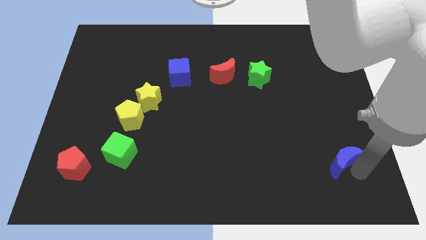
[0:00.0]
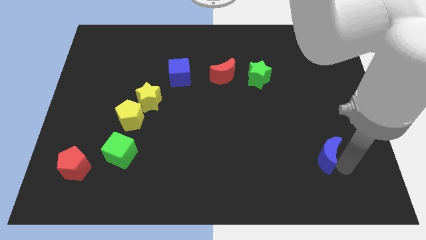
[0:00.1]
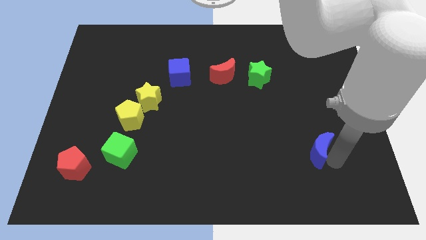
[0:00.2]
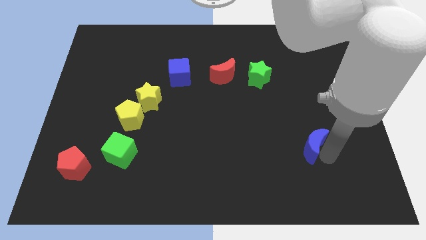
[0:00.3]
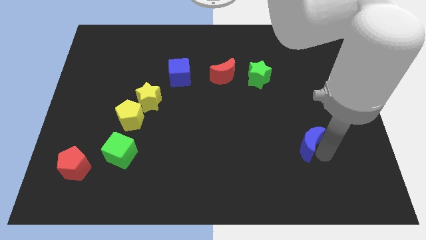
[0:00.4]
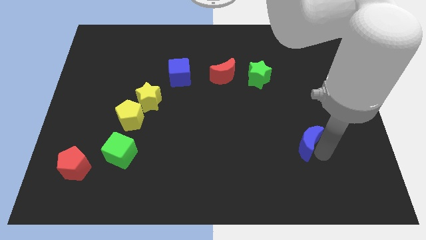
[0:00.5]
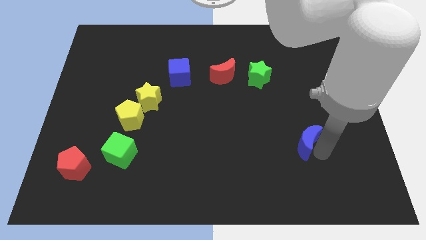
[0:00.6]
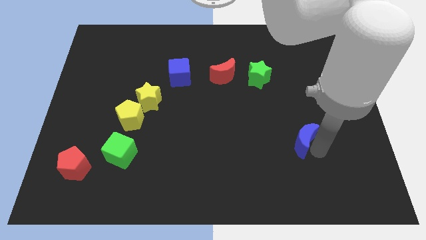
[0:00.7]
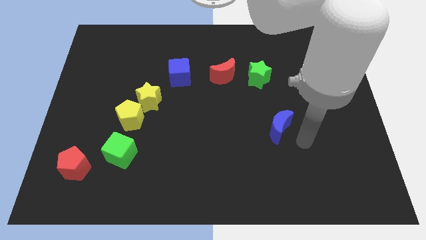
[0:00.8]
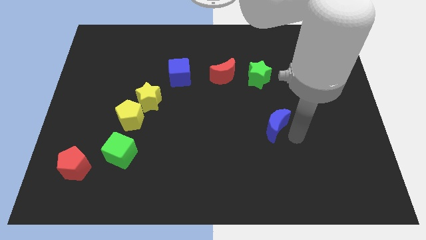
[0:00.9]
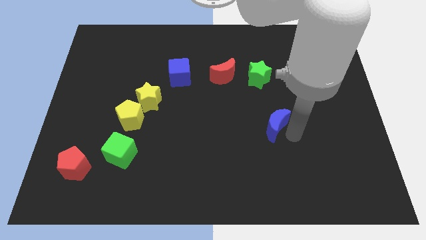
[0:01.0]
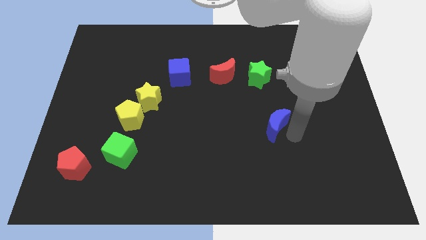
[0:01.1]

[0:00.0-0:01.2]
push the blue crescent towards the center of the board

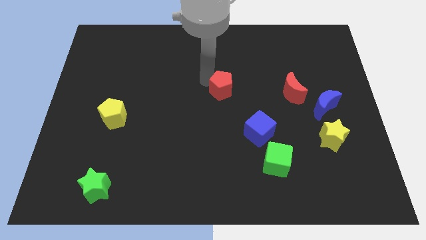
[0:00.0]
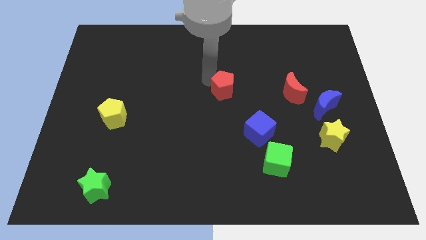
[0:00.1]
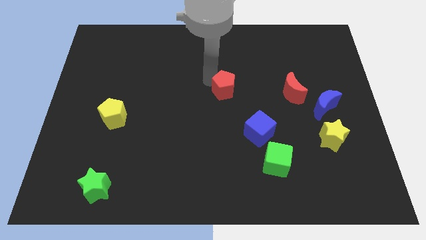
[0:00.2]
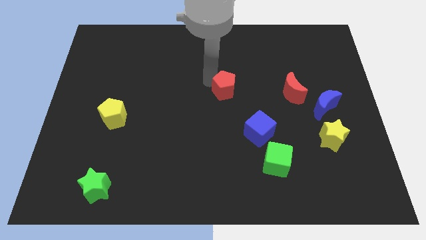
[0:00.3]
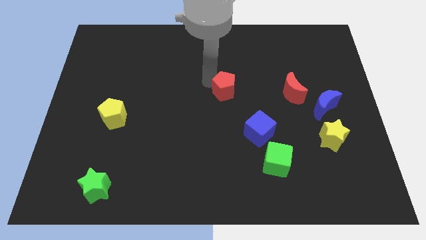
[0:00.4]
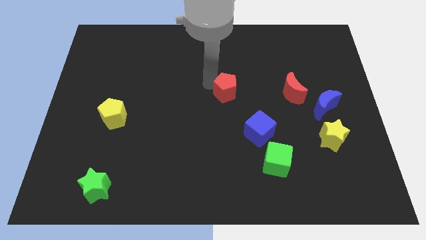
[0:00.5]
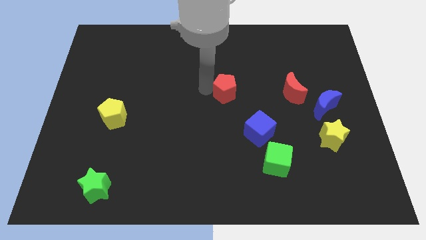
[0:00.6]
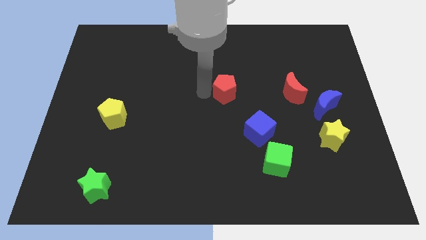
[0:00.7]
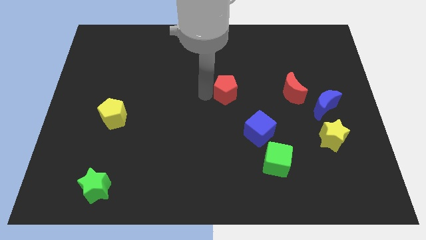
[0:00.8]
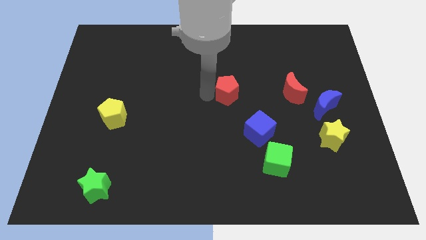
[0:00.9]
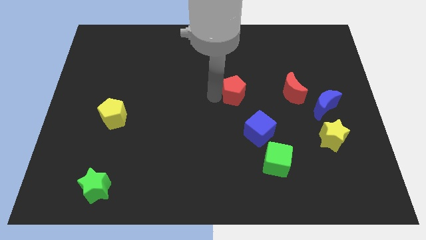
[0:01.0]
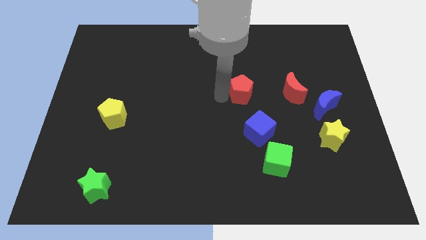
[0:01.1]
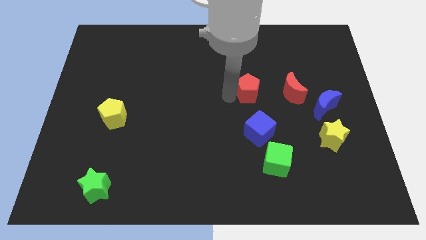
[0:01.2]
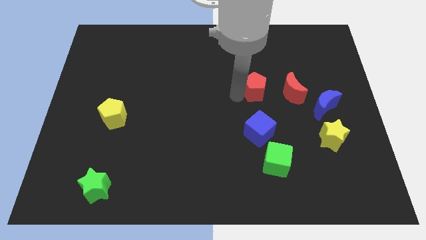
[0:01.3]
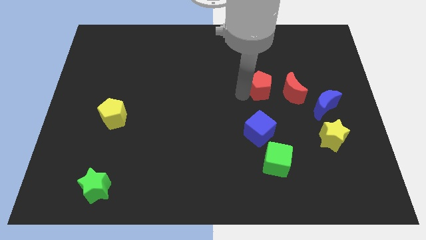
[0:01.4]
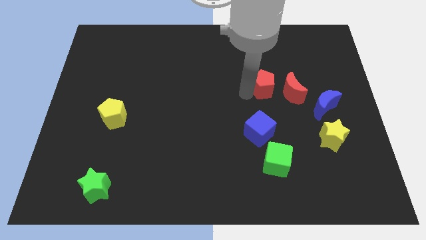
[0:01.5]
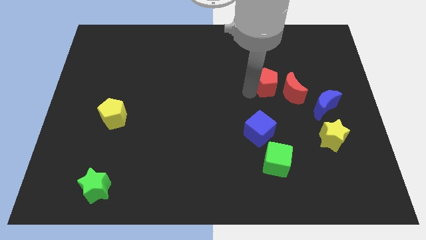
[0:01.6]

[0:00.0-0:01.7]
bring the red pentagon near to the left side of the red moon

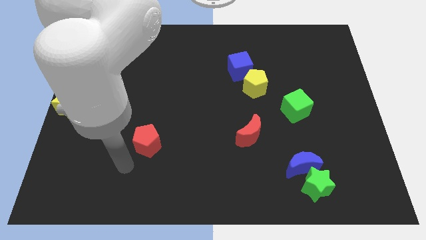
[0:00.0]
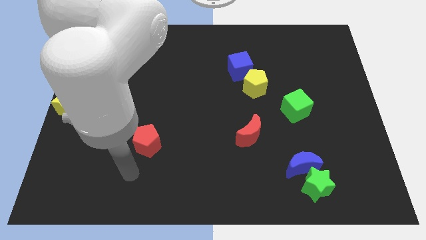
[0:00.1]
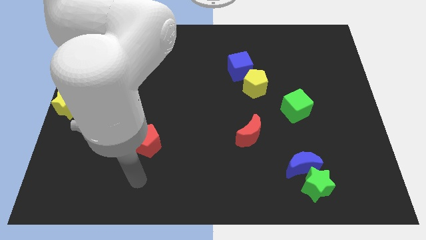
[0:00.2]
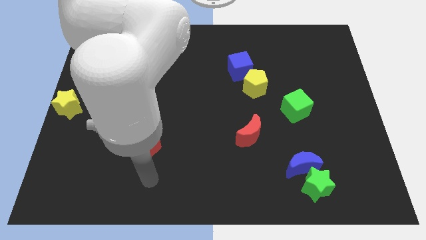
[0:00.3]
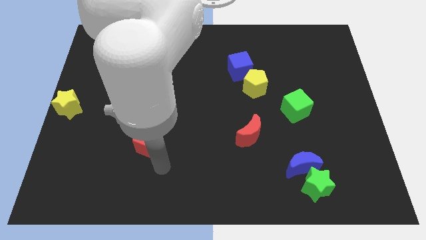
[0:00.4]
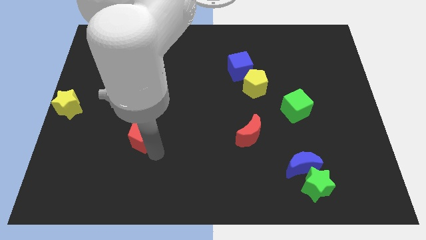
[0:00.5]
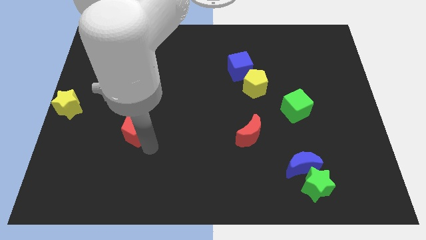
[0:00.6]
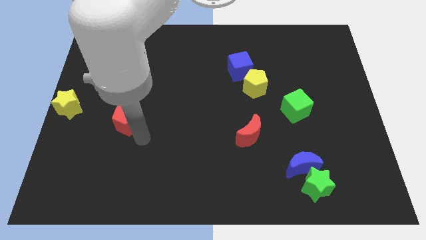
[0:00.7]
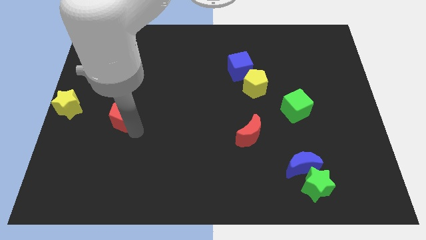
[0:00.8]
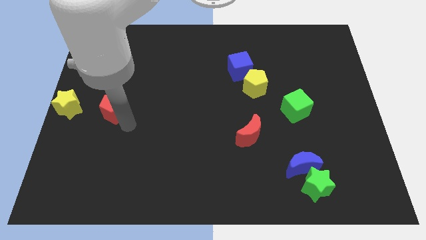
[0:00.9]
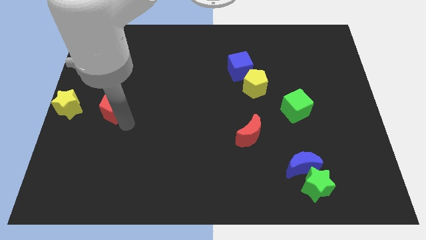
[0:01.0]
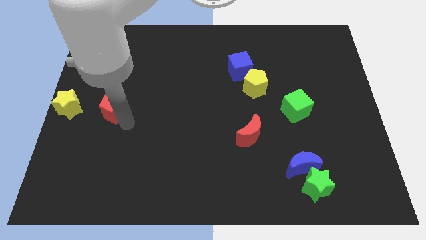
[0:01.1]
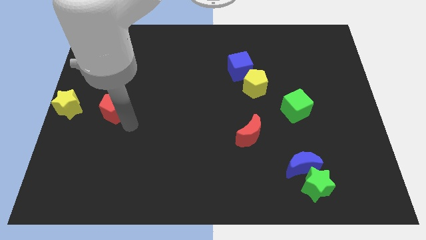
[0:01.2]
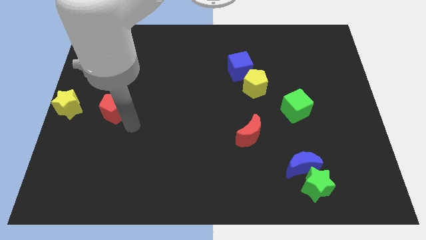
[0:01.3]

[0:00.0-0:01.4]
slide the red pentagon parallel right to the yellow star

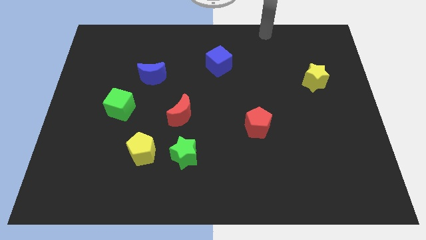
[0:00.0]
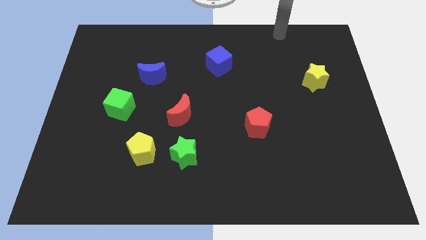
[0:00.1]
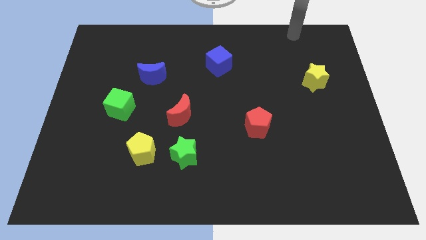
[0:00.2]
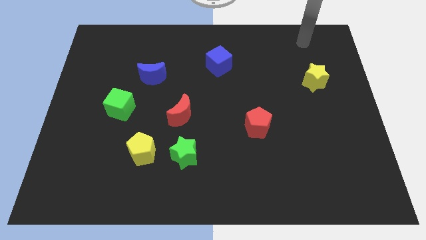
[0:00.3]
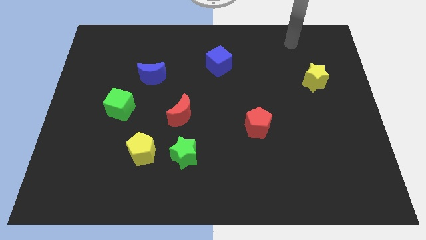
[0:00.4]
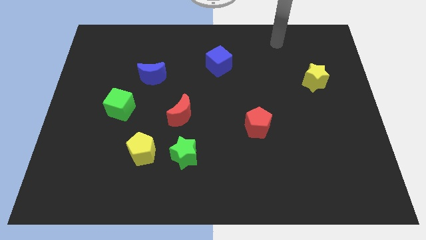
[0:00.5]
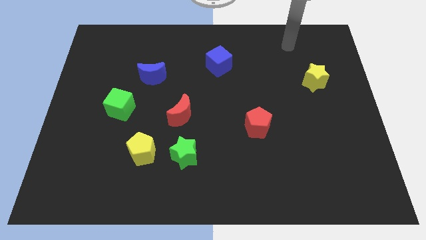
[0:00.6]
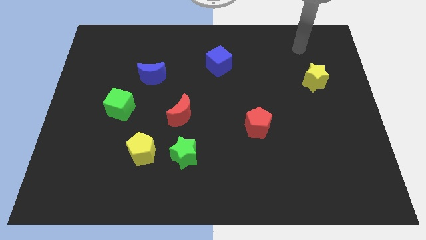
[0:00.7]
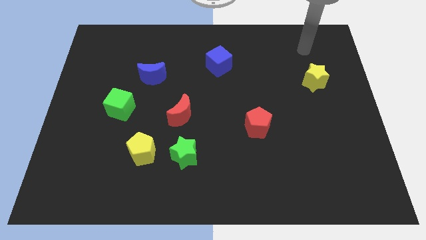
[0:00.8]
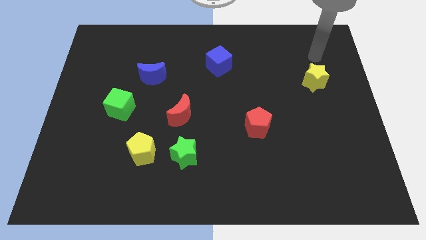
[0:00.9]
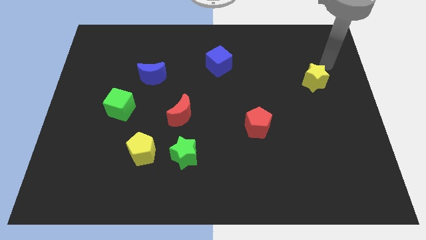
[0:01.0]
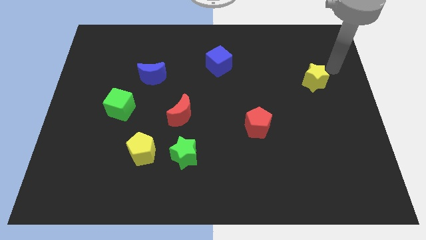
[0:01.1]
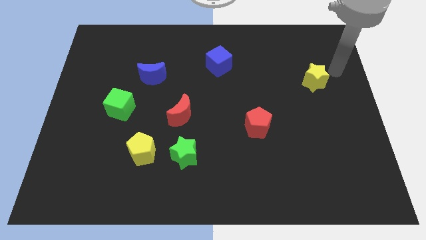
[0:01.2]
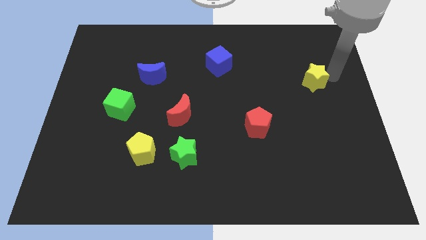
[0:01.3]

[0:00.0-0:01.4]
move the arm to the yellow star

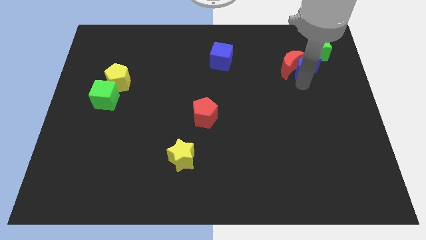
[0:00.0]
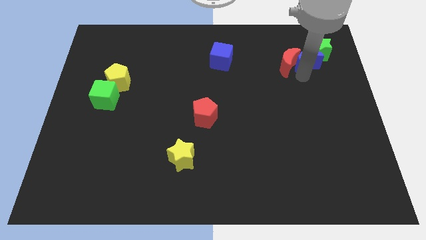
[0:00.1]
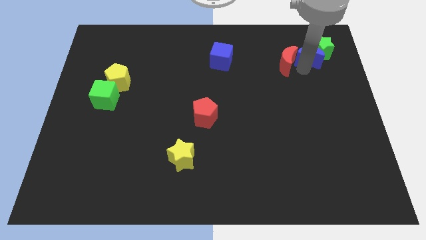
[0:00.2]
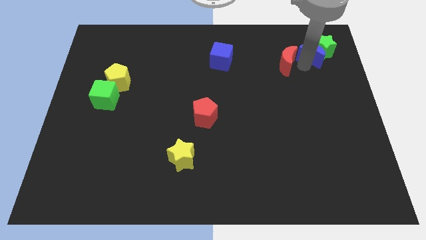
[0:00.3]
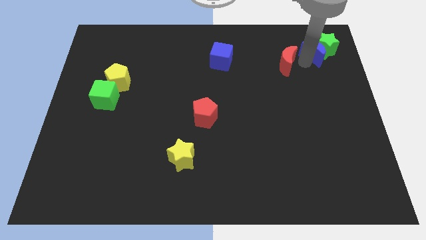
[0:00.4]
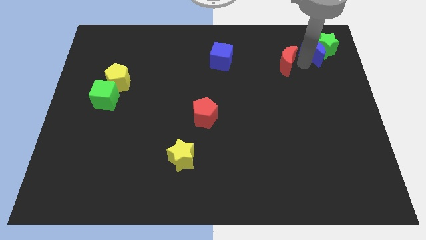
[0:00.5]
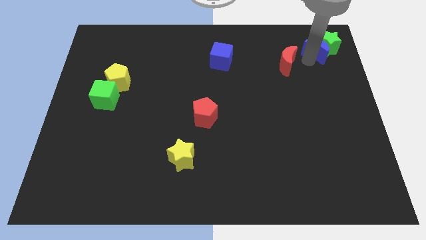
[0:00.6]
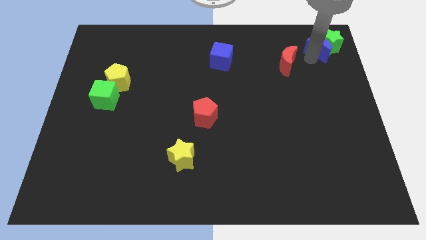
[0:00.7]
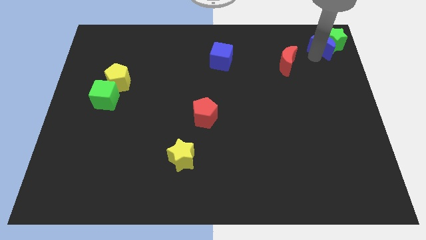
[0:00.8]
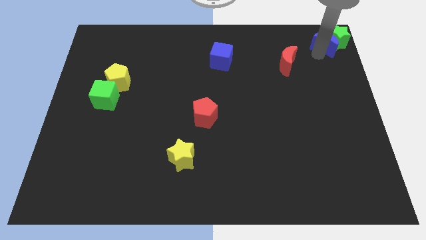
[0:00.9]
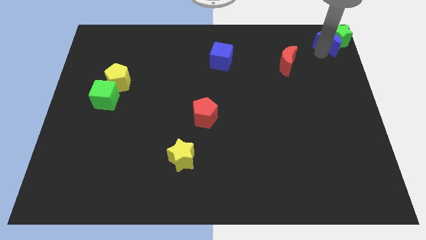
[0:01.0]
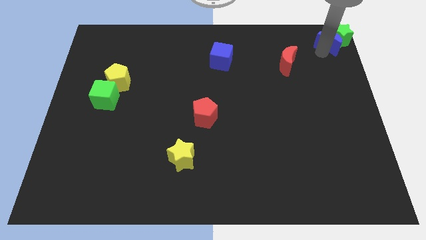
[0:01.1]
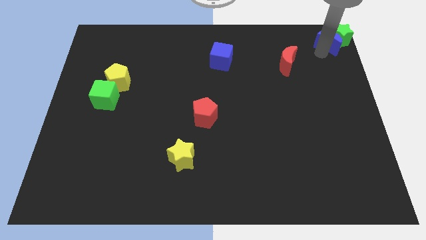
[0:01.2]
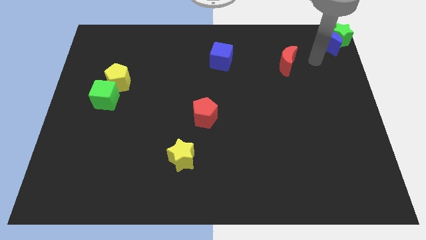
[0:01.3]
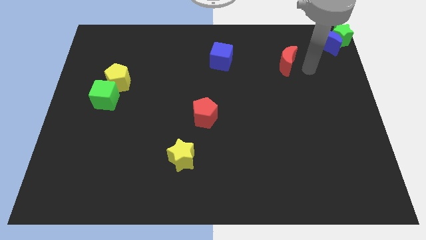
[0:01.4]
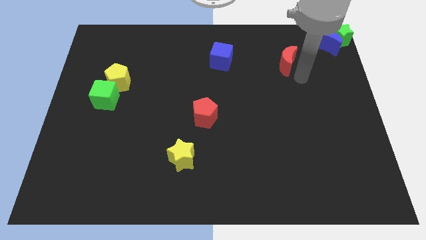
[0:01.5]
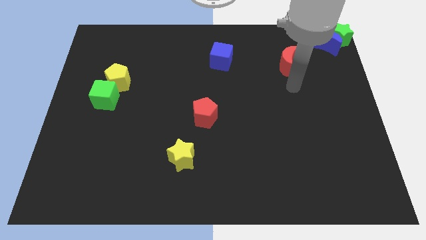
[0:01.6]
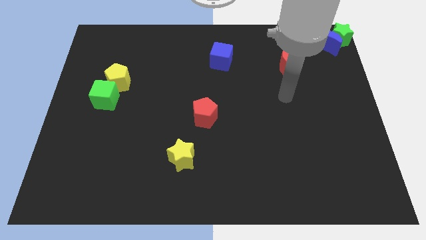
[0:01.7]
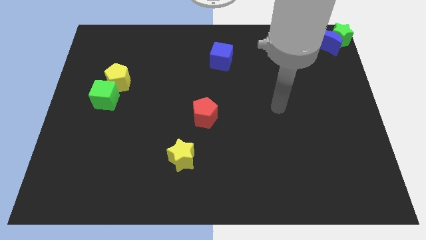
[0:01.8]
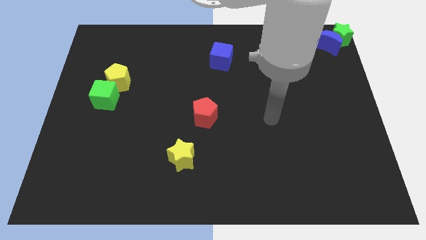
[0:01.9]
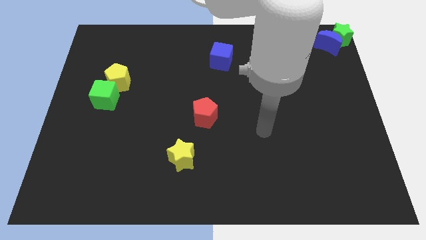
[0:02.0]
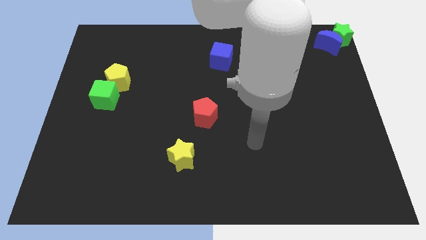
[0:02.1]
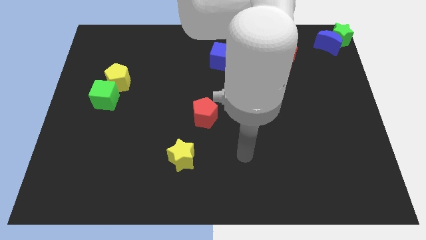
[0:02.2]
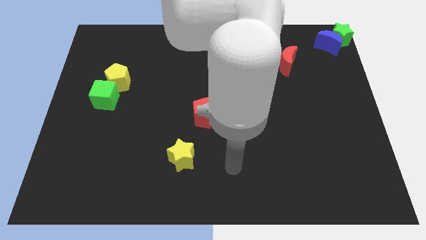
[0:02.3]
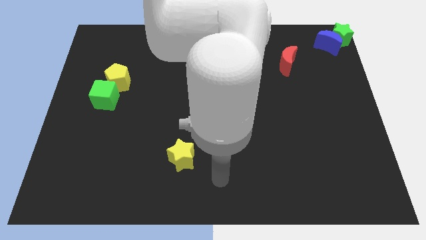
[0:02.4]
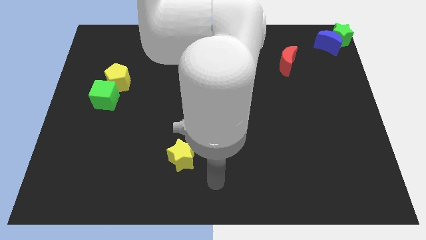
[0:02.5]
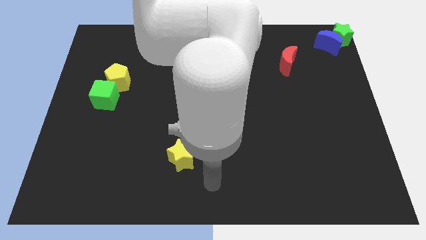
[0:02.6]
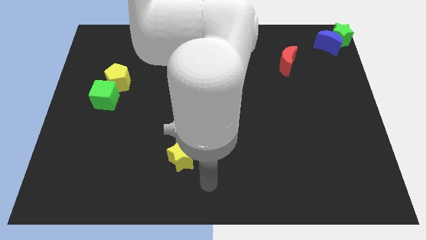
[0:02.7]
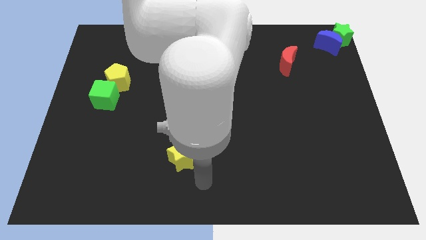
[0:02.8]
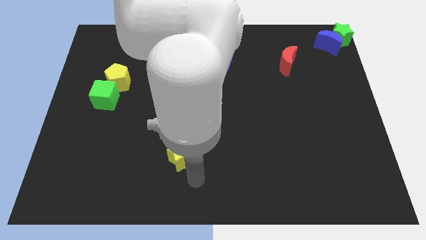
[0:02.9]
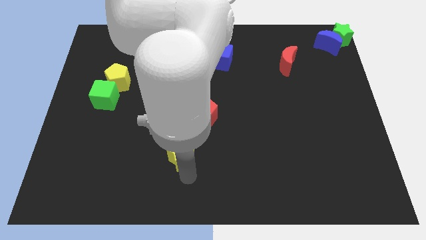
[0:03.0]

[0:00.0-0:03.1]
move blue crescent along with the green star to the top right corner of the board
